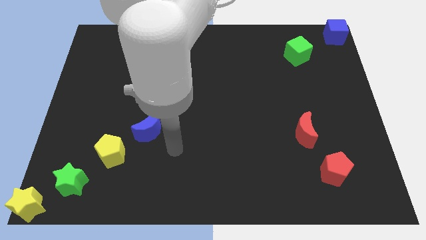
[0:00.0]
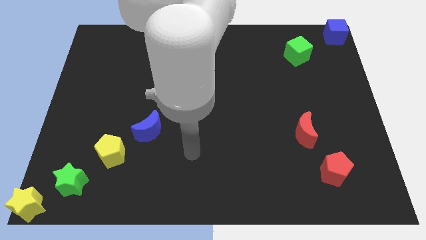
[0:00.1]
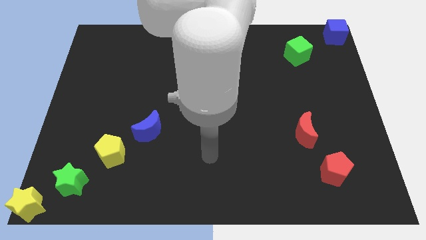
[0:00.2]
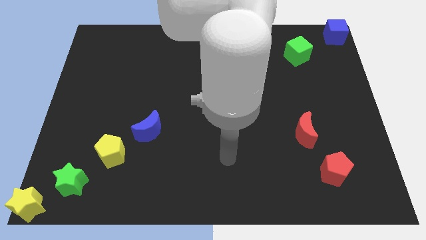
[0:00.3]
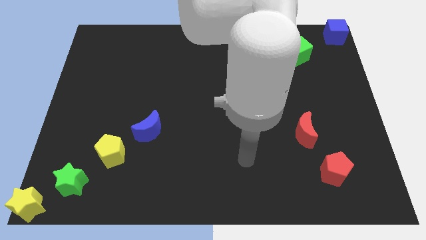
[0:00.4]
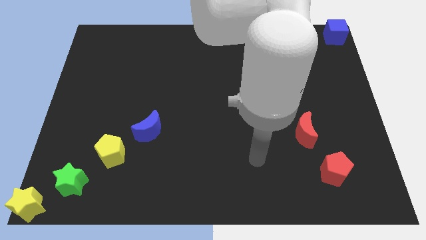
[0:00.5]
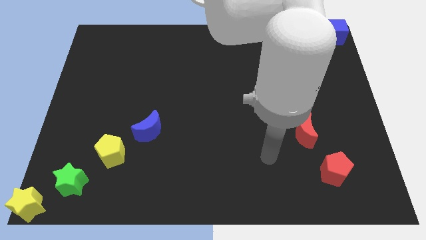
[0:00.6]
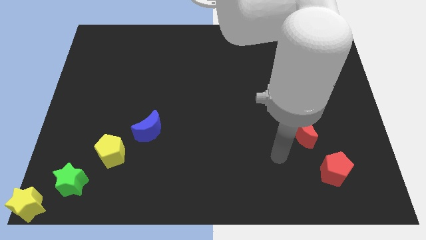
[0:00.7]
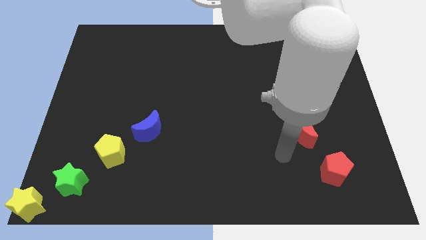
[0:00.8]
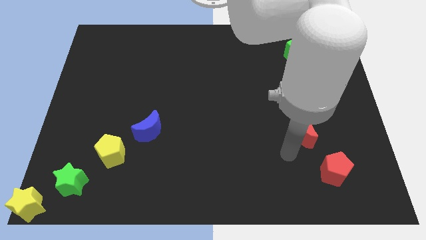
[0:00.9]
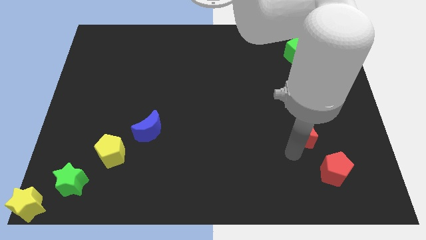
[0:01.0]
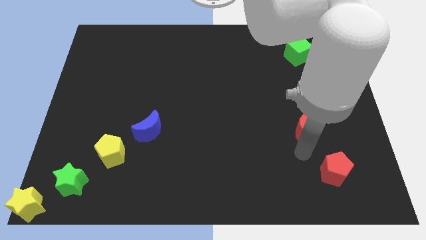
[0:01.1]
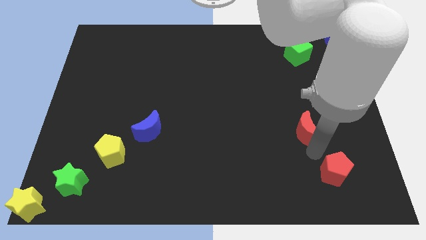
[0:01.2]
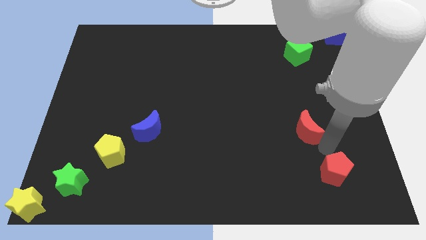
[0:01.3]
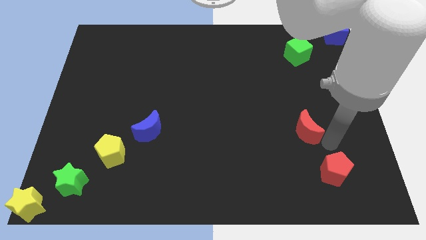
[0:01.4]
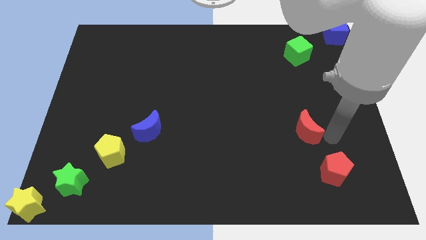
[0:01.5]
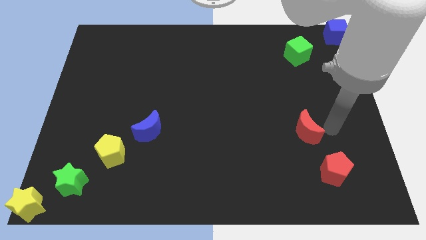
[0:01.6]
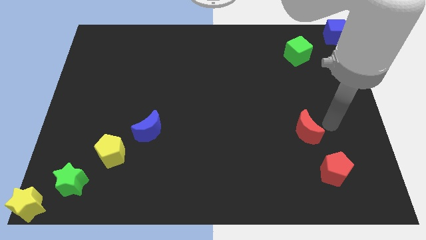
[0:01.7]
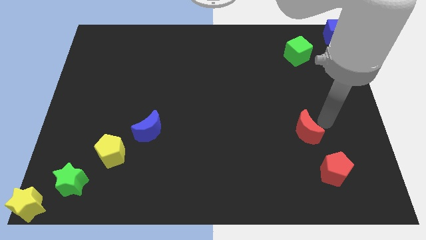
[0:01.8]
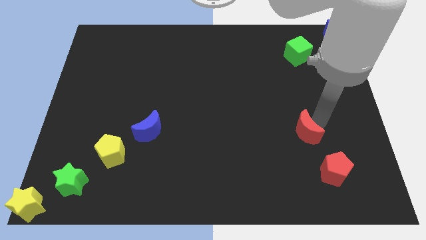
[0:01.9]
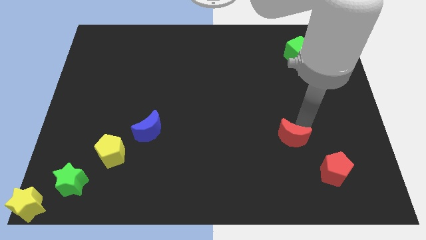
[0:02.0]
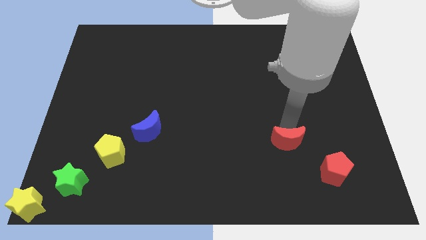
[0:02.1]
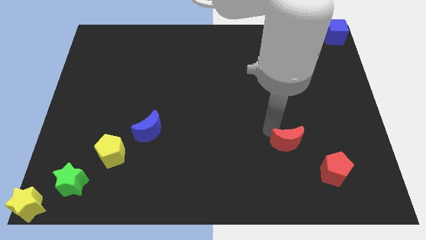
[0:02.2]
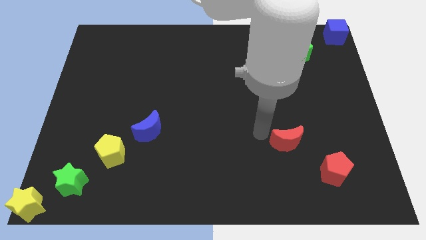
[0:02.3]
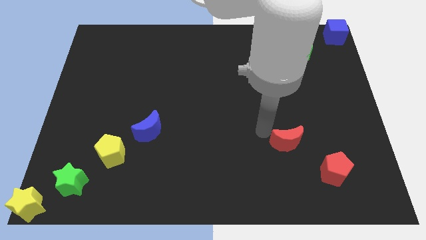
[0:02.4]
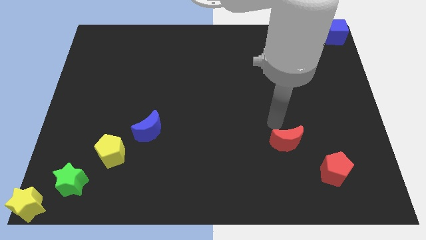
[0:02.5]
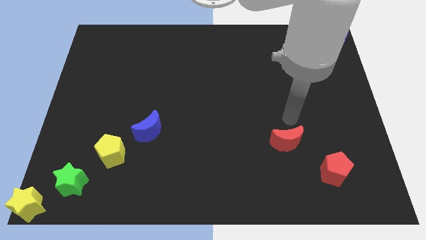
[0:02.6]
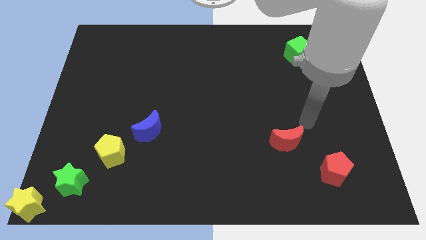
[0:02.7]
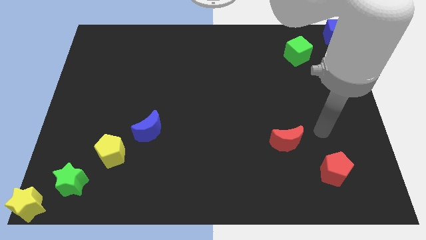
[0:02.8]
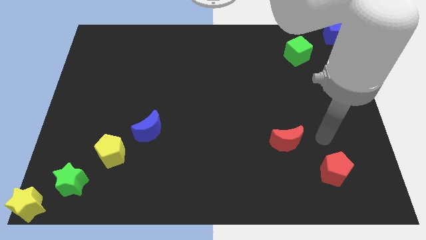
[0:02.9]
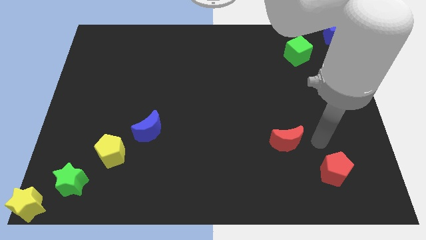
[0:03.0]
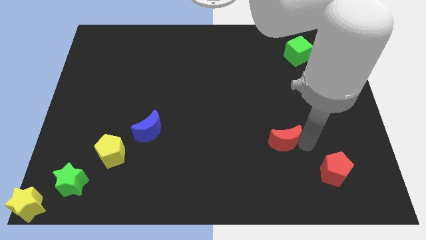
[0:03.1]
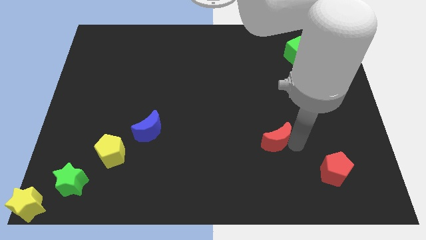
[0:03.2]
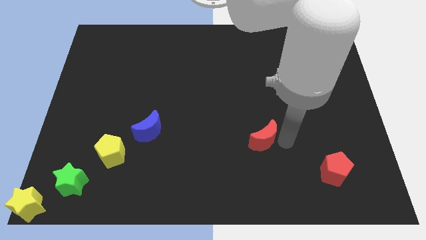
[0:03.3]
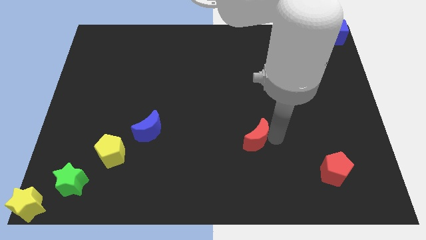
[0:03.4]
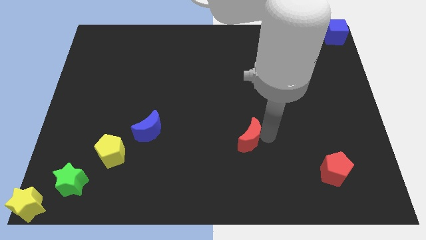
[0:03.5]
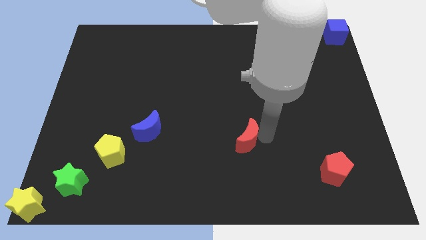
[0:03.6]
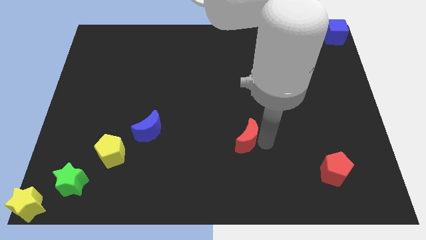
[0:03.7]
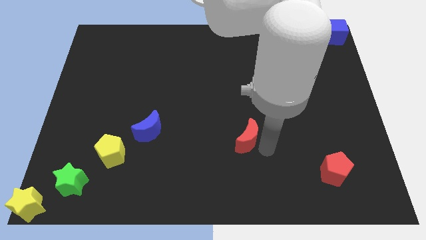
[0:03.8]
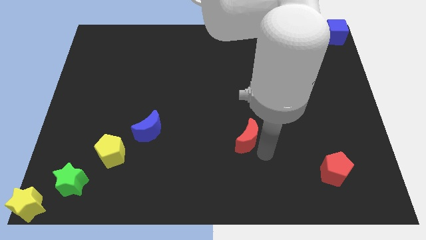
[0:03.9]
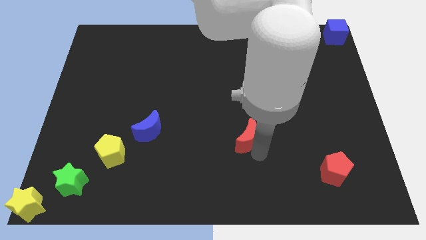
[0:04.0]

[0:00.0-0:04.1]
move the red crescent to the left of the board

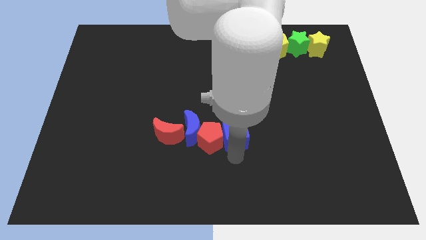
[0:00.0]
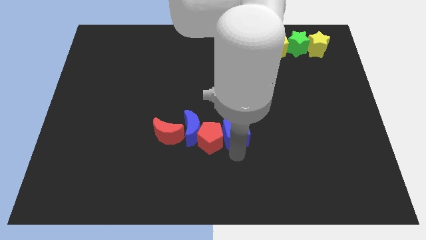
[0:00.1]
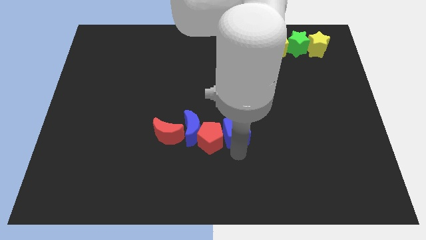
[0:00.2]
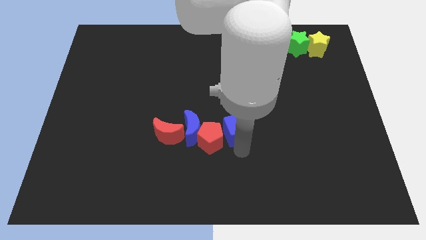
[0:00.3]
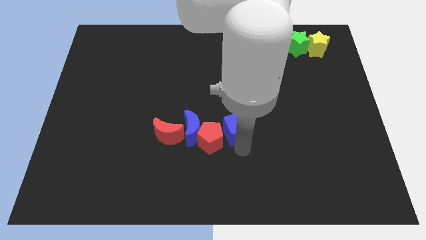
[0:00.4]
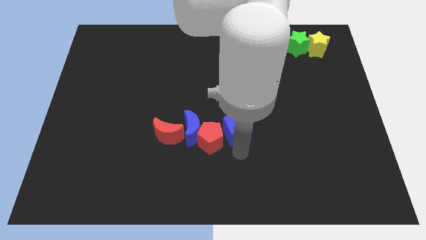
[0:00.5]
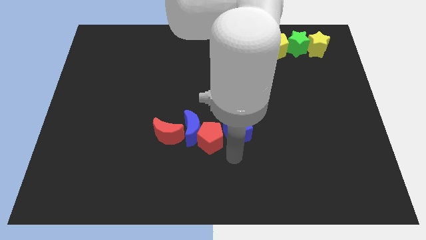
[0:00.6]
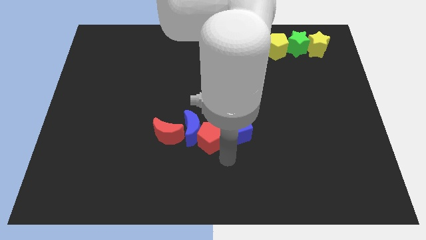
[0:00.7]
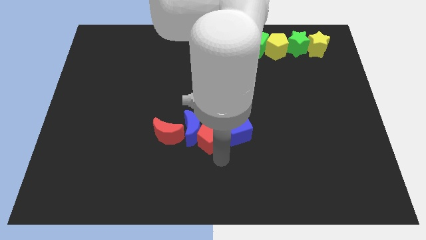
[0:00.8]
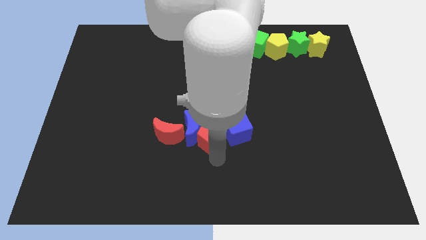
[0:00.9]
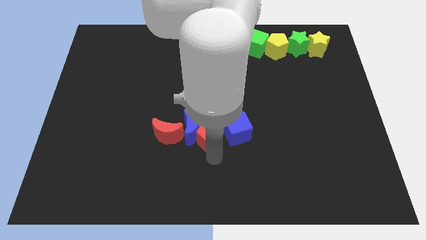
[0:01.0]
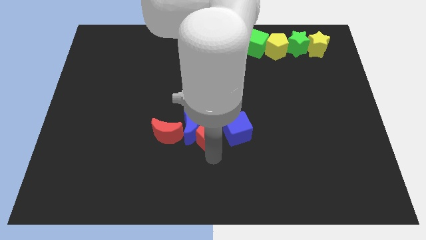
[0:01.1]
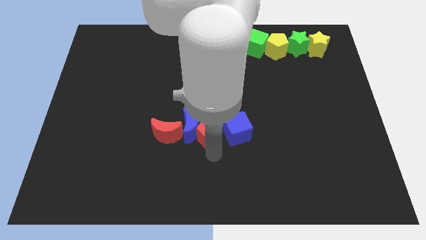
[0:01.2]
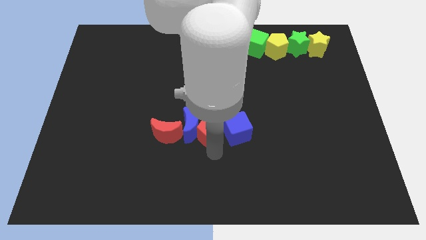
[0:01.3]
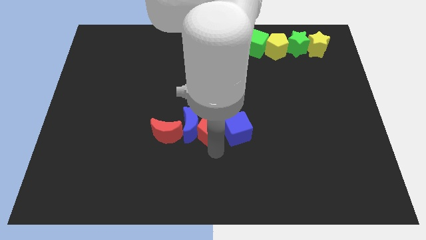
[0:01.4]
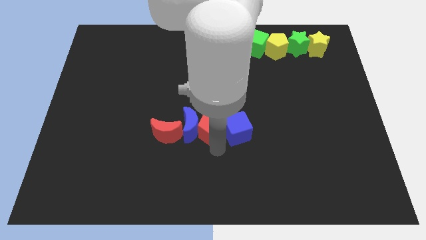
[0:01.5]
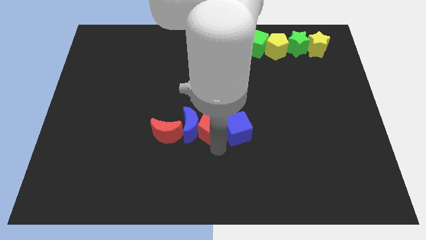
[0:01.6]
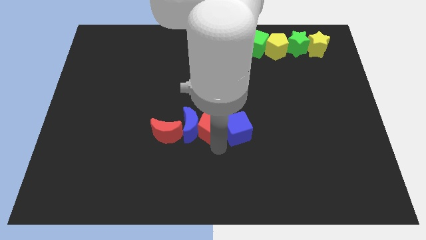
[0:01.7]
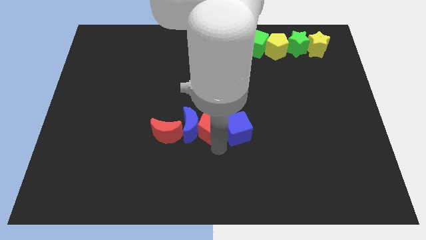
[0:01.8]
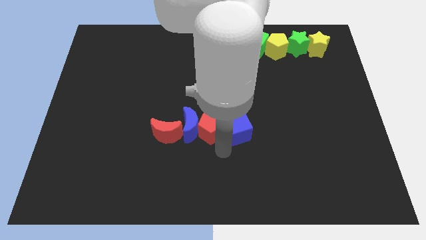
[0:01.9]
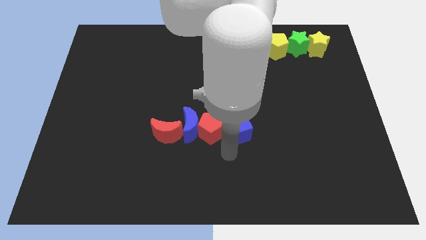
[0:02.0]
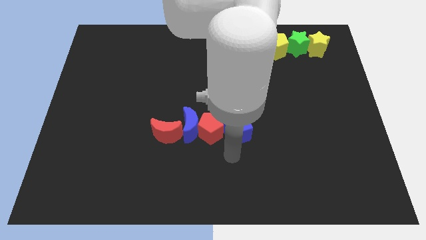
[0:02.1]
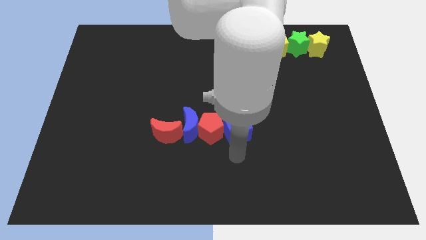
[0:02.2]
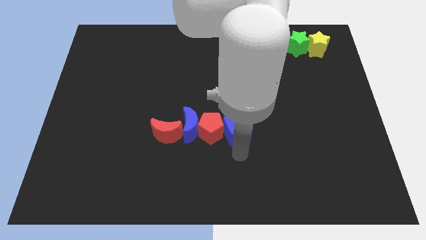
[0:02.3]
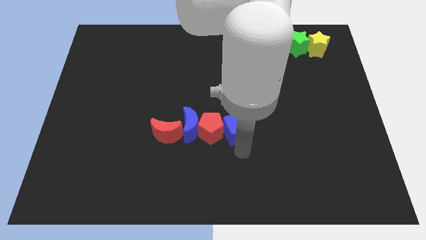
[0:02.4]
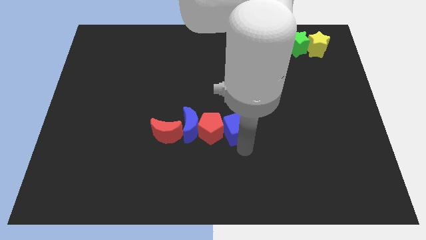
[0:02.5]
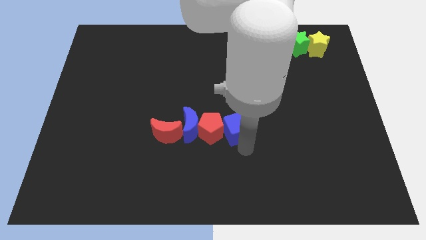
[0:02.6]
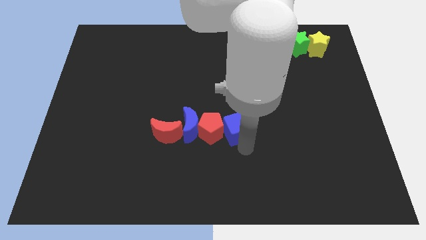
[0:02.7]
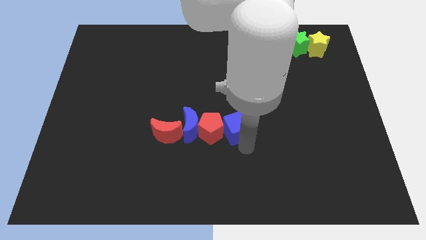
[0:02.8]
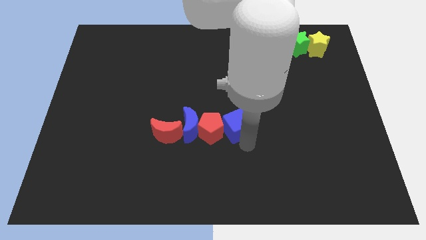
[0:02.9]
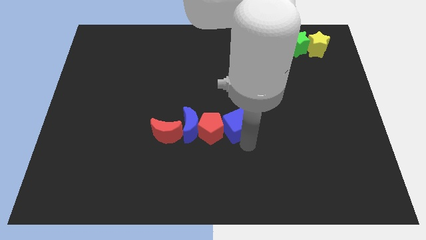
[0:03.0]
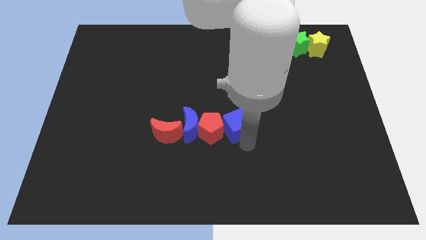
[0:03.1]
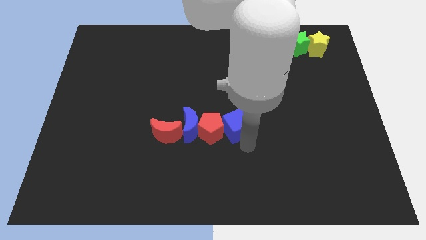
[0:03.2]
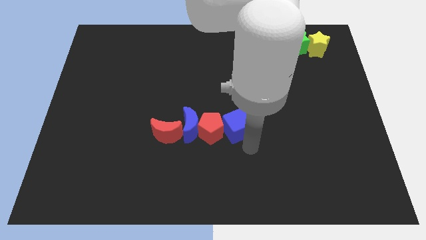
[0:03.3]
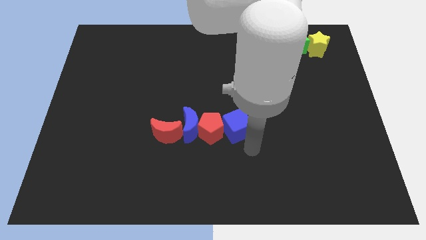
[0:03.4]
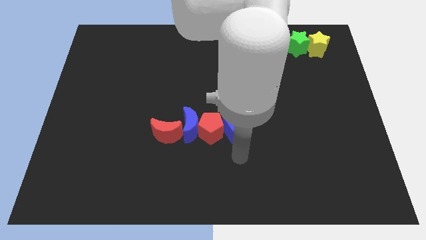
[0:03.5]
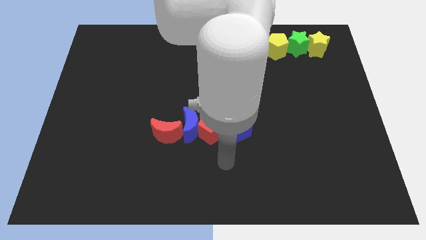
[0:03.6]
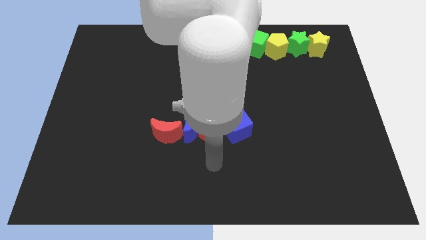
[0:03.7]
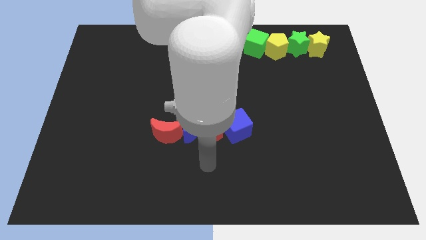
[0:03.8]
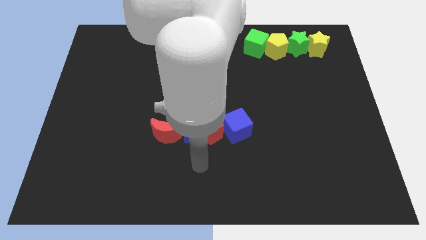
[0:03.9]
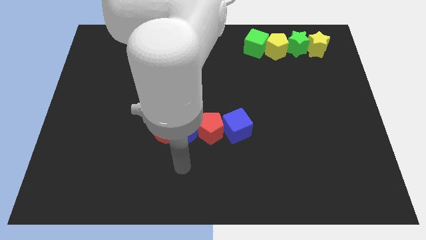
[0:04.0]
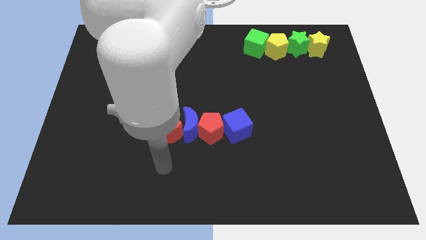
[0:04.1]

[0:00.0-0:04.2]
adjust the red and blue blocks to form a horizontal line

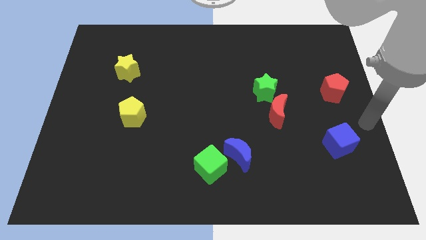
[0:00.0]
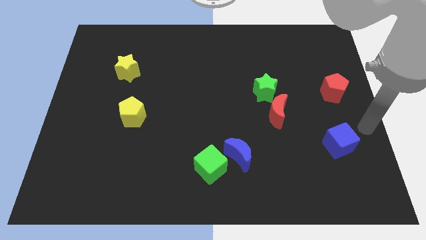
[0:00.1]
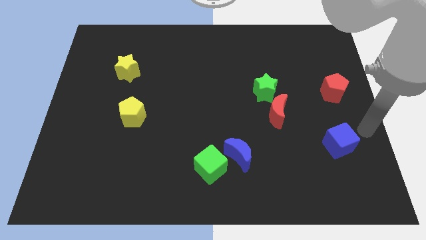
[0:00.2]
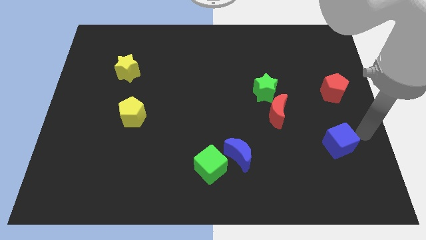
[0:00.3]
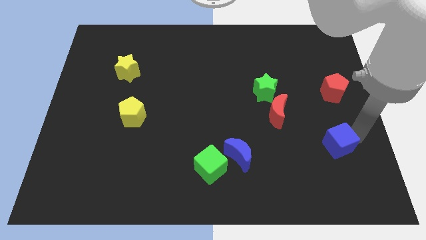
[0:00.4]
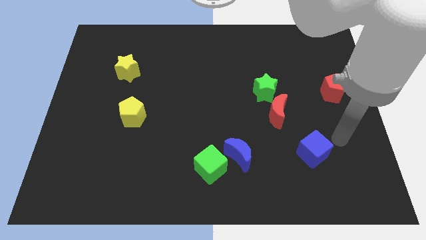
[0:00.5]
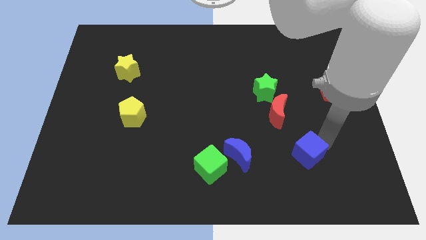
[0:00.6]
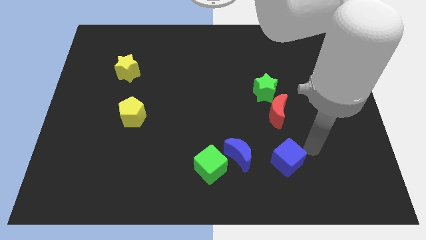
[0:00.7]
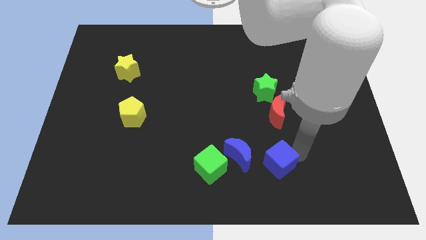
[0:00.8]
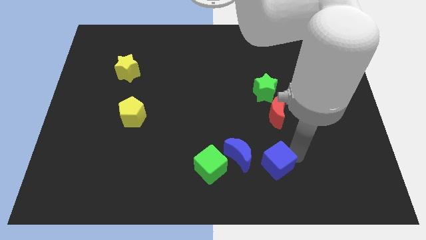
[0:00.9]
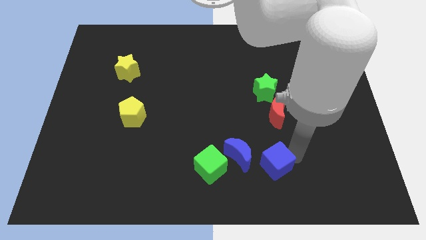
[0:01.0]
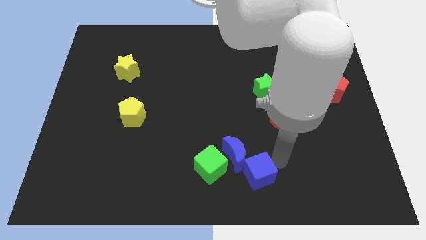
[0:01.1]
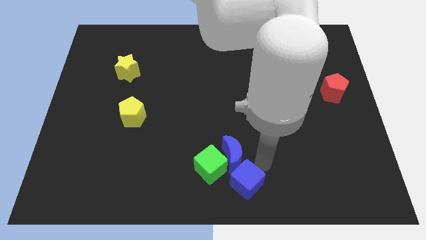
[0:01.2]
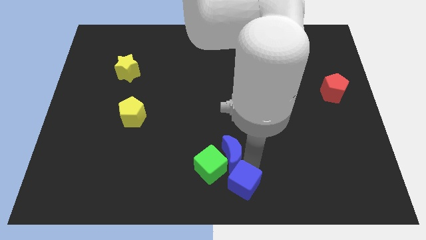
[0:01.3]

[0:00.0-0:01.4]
slide the blue cube into the blue moon
